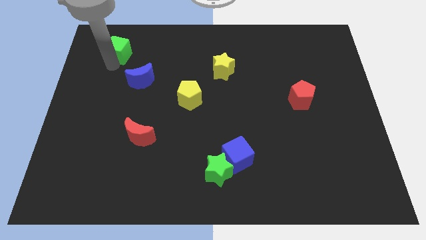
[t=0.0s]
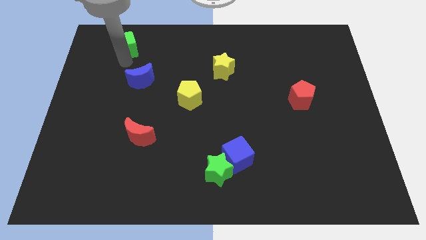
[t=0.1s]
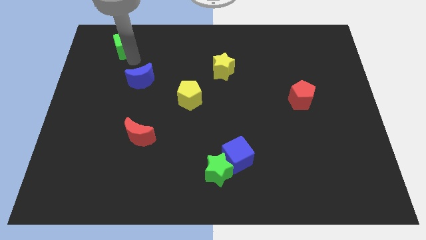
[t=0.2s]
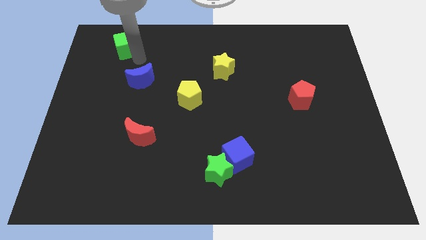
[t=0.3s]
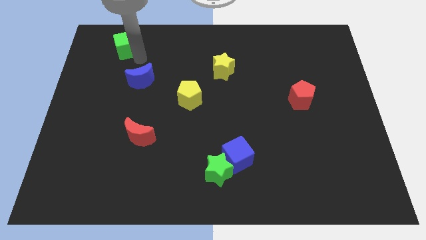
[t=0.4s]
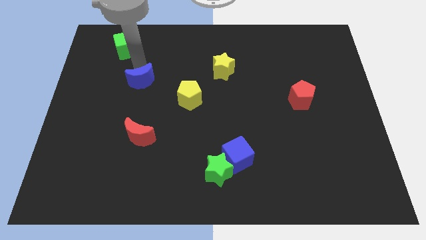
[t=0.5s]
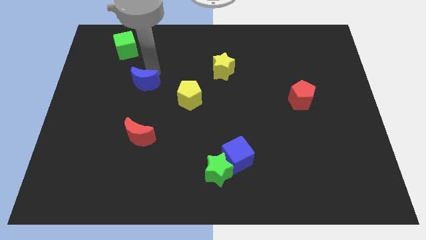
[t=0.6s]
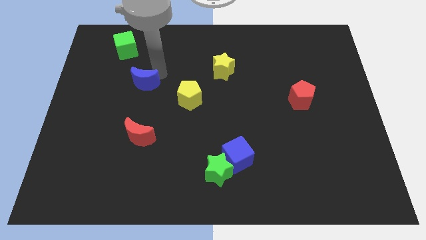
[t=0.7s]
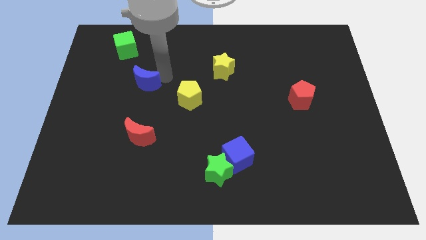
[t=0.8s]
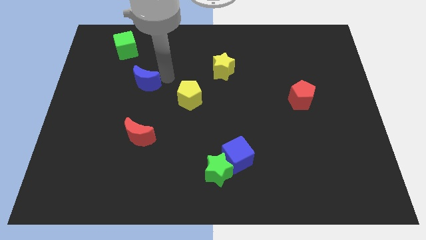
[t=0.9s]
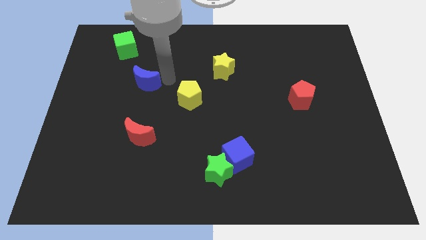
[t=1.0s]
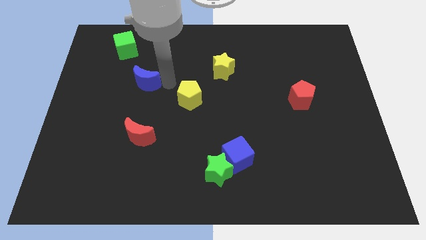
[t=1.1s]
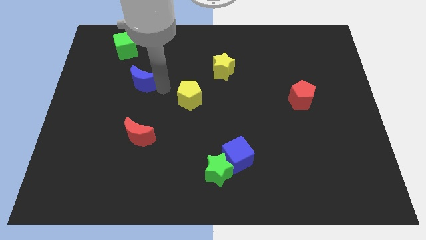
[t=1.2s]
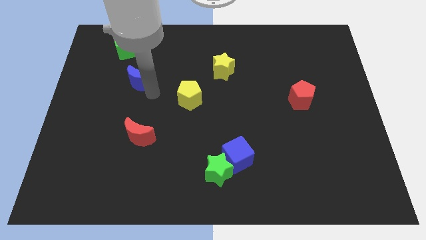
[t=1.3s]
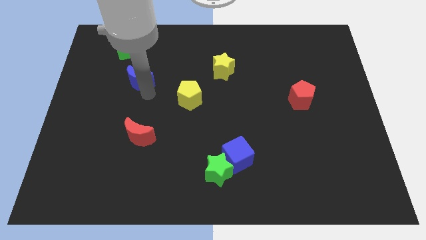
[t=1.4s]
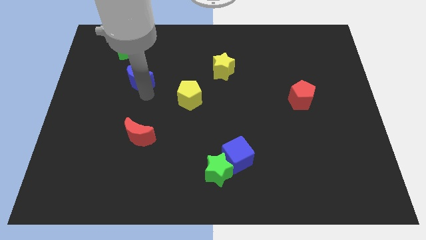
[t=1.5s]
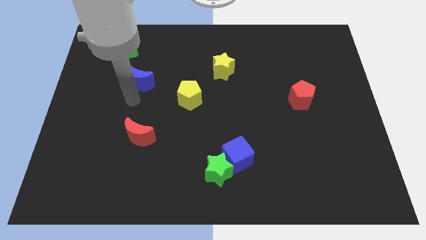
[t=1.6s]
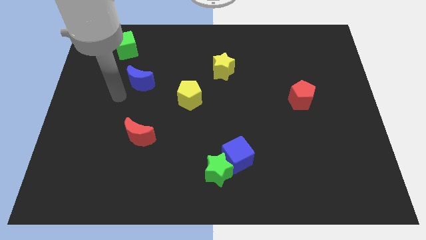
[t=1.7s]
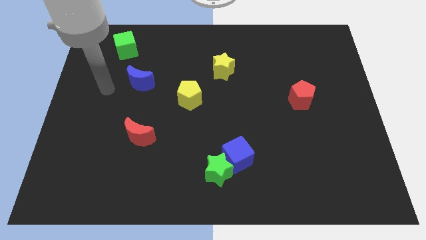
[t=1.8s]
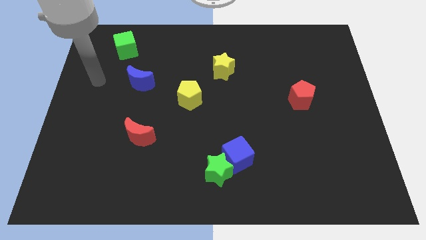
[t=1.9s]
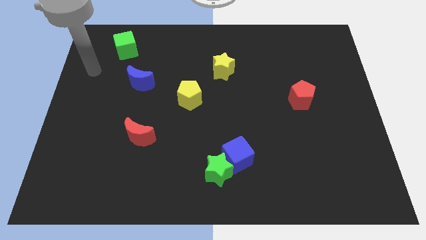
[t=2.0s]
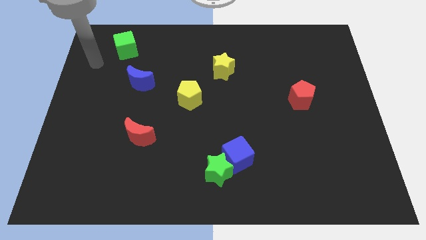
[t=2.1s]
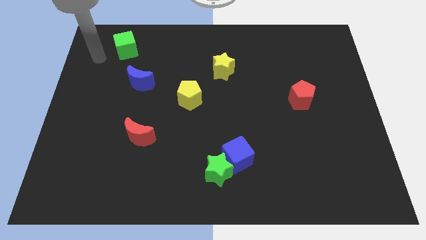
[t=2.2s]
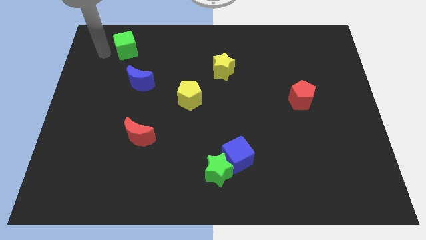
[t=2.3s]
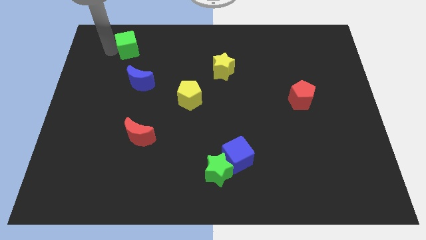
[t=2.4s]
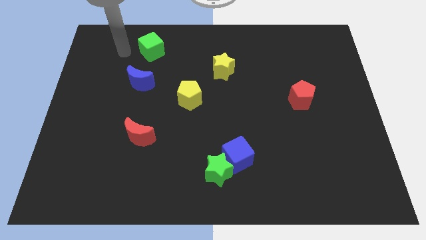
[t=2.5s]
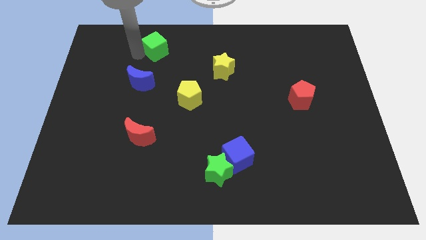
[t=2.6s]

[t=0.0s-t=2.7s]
slightly move down the blue moon

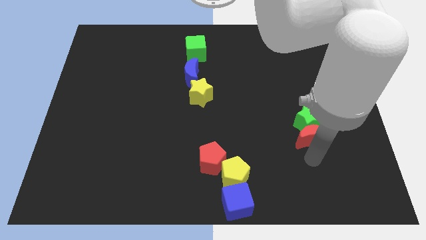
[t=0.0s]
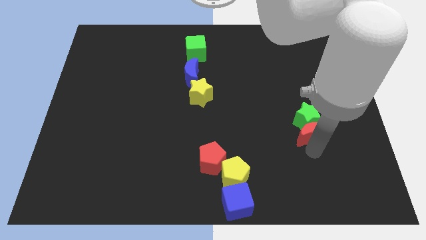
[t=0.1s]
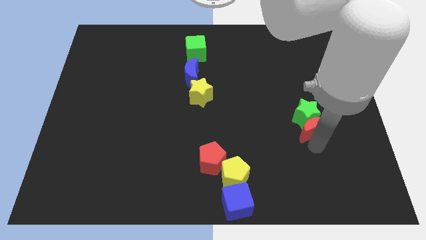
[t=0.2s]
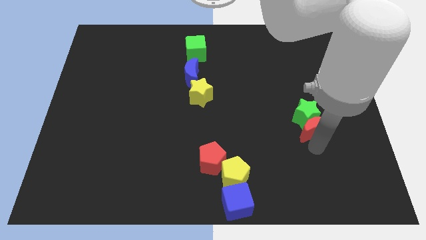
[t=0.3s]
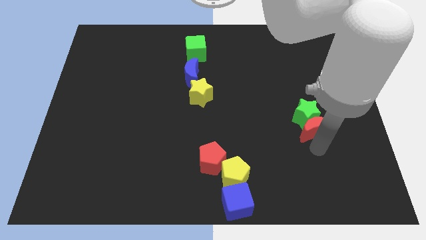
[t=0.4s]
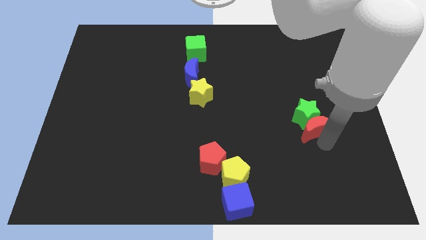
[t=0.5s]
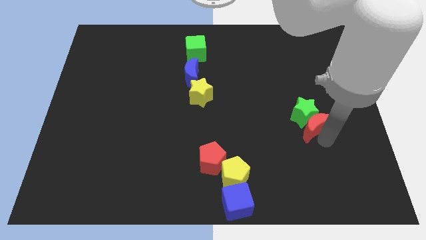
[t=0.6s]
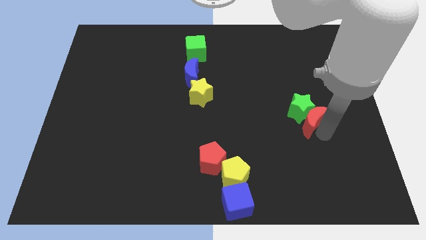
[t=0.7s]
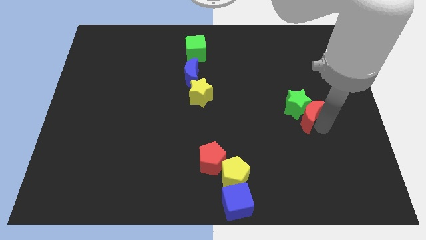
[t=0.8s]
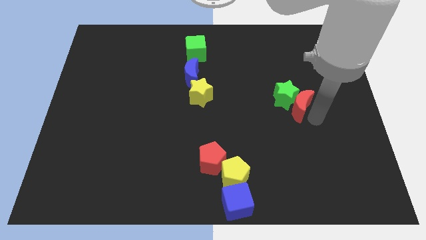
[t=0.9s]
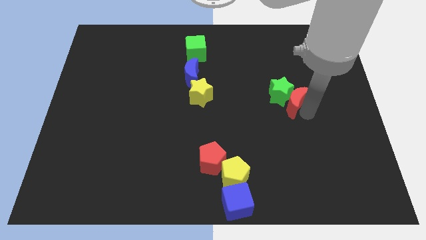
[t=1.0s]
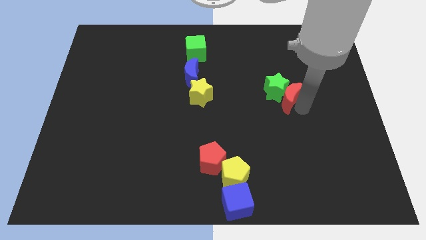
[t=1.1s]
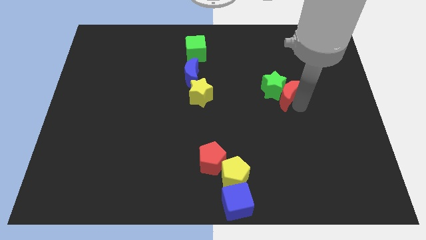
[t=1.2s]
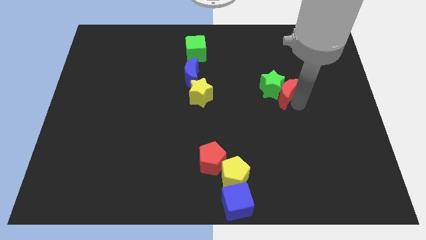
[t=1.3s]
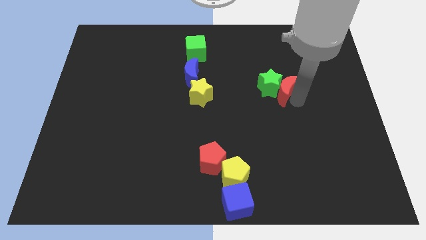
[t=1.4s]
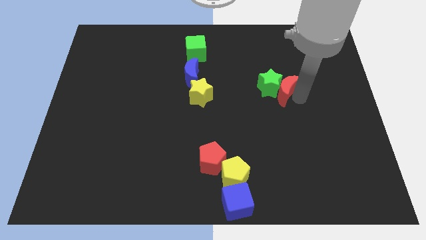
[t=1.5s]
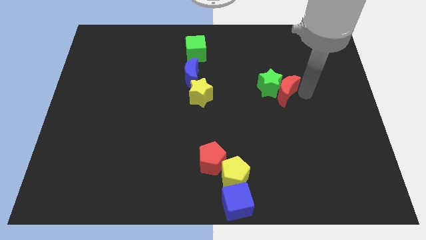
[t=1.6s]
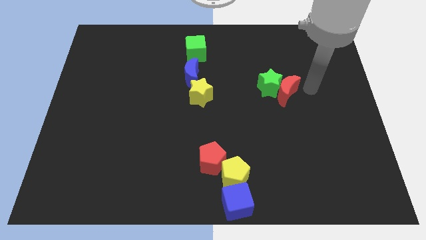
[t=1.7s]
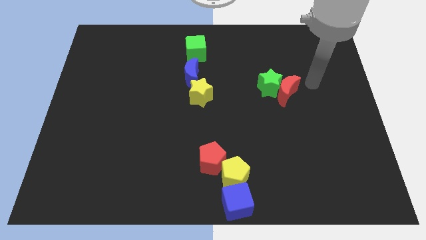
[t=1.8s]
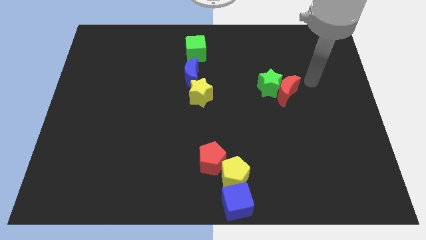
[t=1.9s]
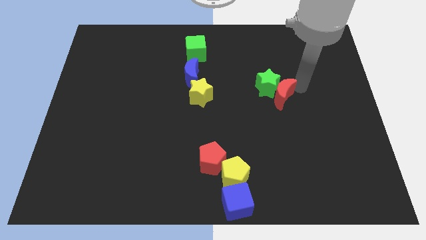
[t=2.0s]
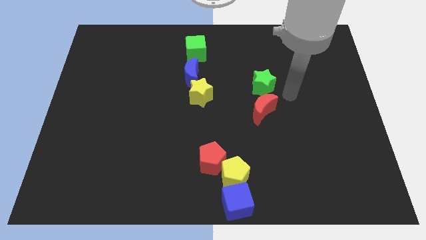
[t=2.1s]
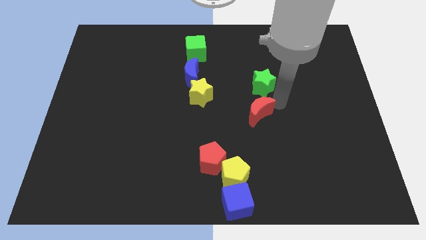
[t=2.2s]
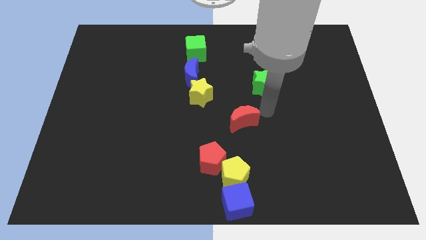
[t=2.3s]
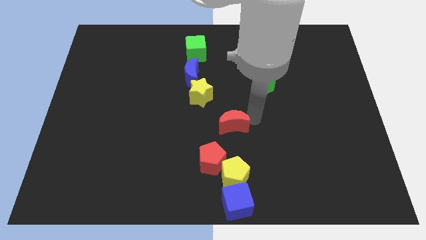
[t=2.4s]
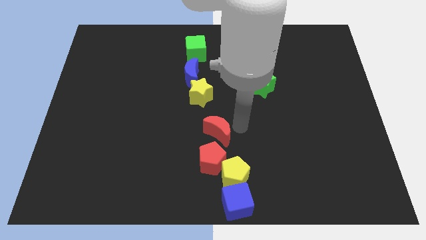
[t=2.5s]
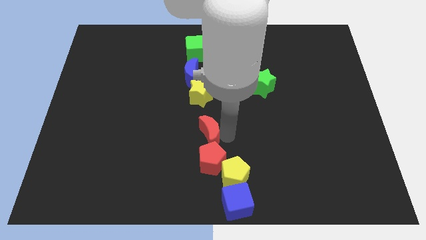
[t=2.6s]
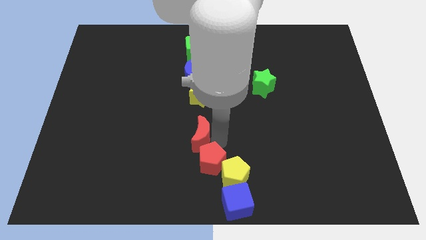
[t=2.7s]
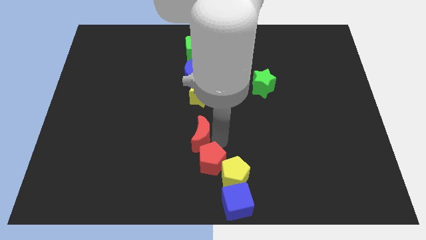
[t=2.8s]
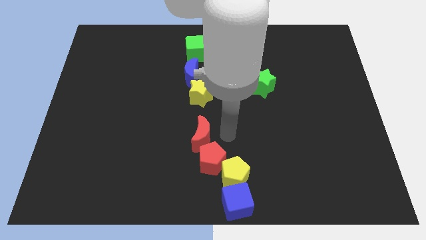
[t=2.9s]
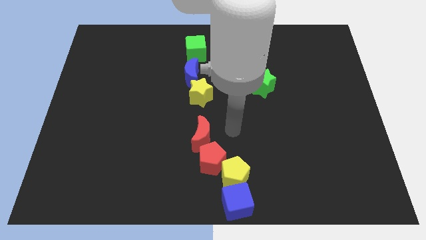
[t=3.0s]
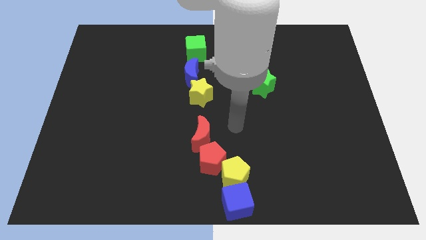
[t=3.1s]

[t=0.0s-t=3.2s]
place the red moon above the red pentagon

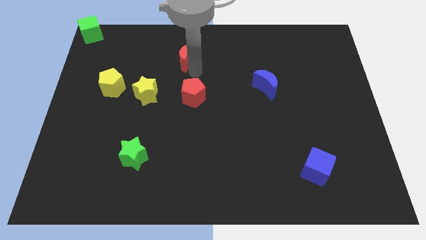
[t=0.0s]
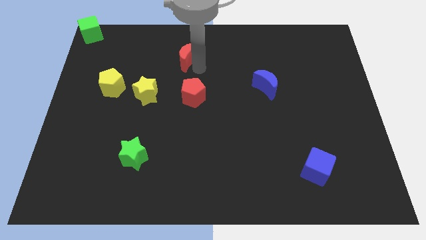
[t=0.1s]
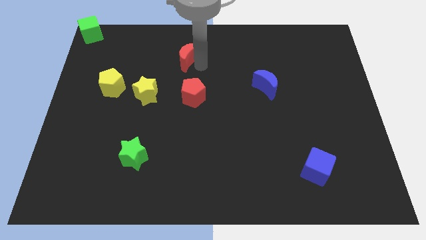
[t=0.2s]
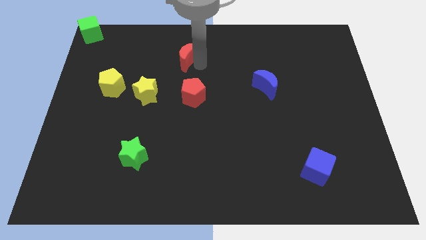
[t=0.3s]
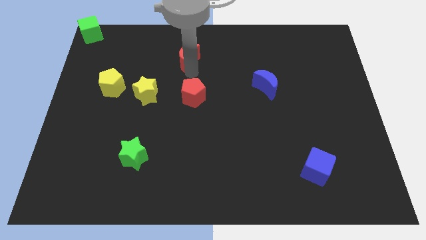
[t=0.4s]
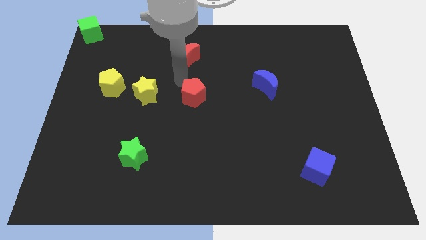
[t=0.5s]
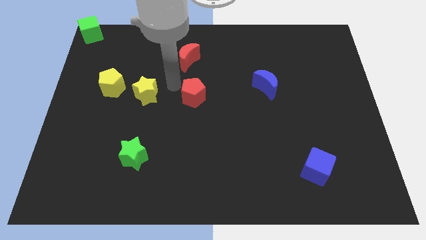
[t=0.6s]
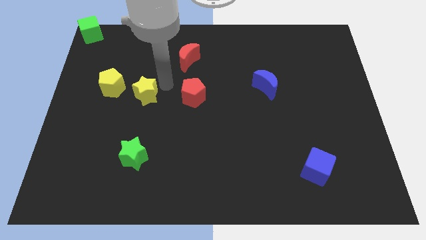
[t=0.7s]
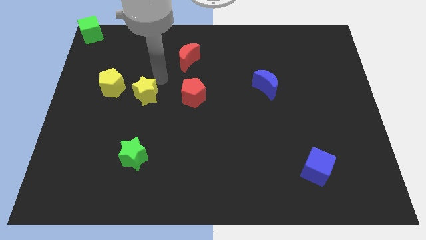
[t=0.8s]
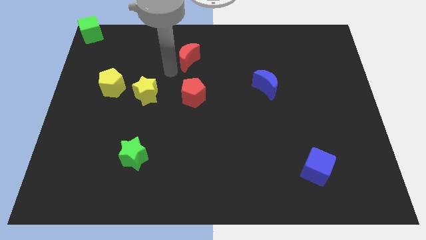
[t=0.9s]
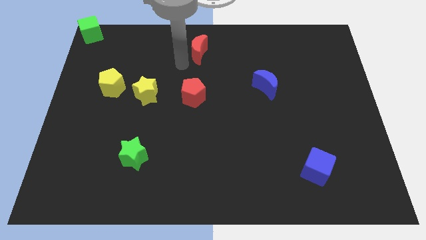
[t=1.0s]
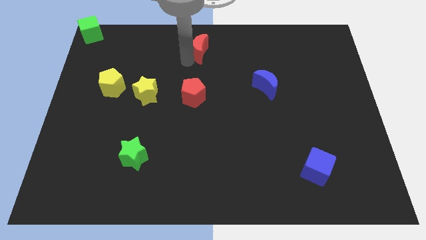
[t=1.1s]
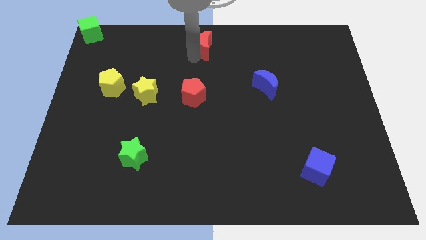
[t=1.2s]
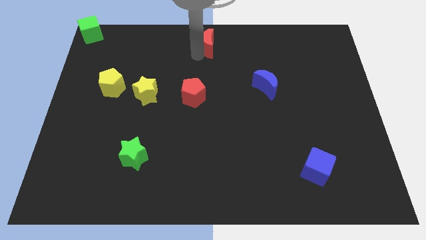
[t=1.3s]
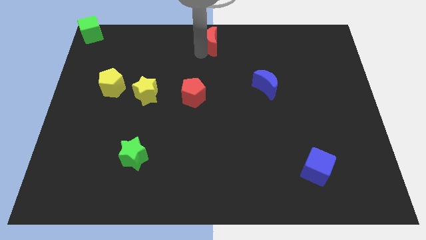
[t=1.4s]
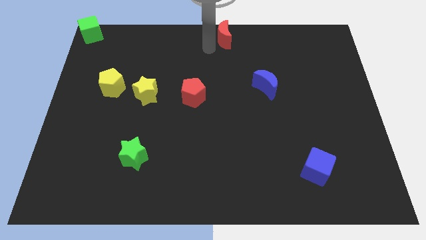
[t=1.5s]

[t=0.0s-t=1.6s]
place the red moon towards the top center of the board

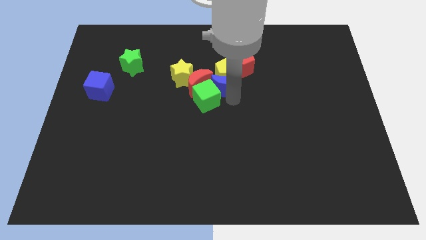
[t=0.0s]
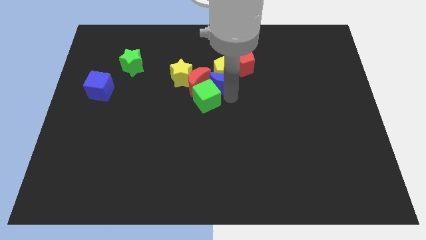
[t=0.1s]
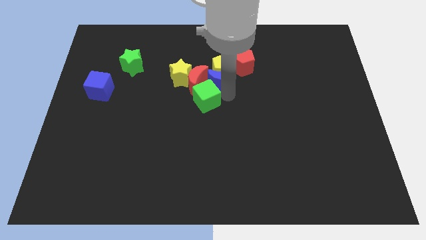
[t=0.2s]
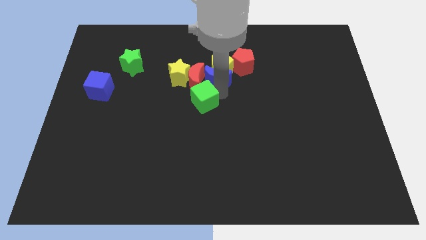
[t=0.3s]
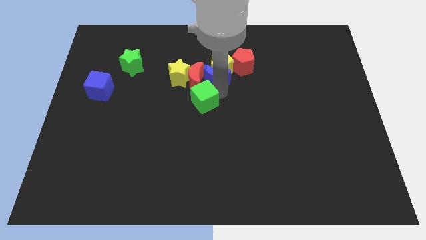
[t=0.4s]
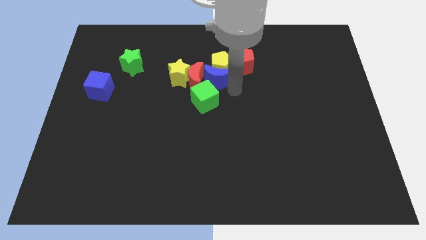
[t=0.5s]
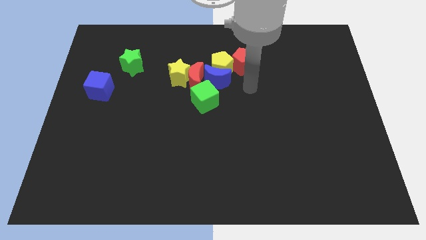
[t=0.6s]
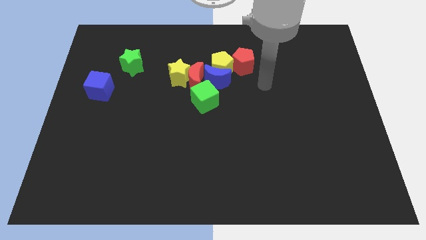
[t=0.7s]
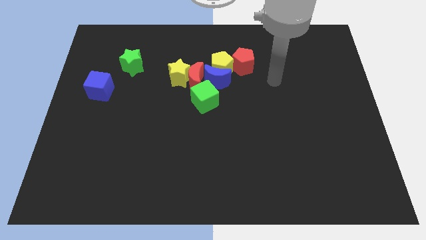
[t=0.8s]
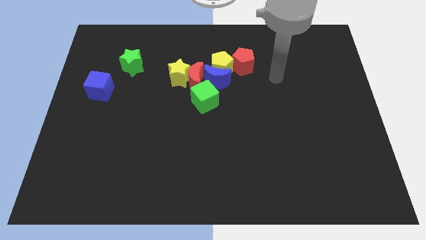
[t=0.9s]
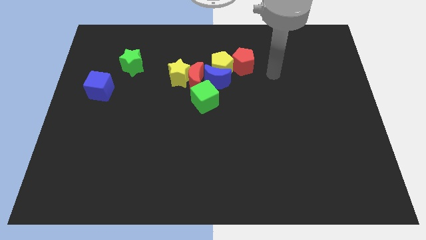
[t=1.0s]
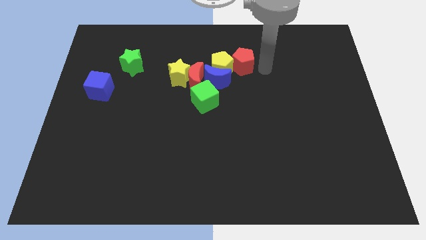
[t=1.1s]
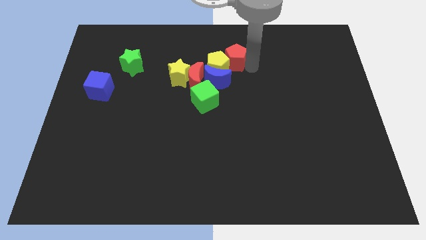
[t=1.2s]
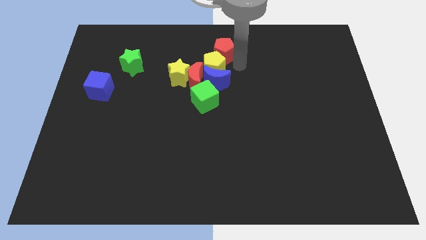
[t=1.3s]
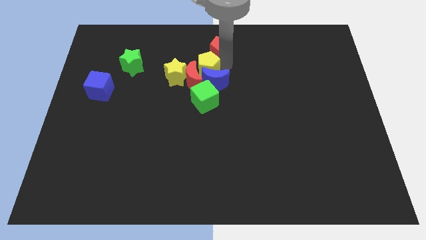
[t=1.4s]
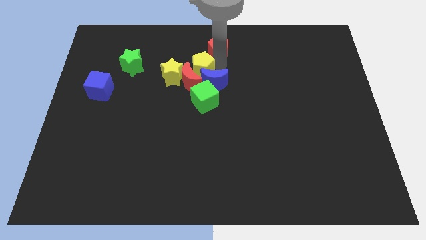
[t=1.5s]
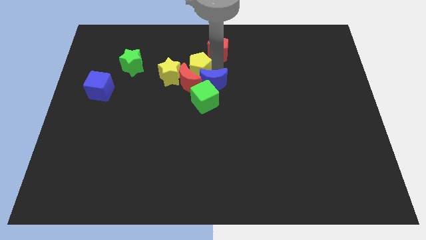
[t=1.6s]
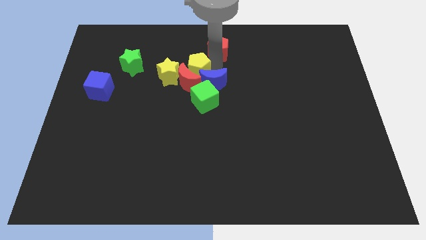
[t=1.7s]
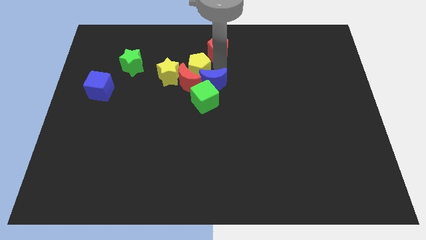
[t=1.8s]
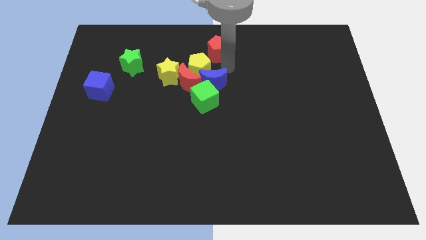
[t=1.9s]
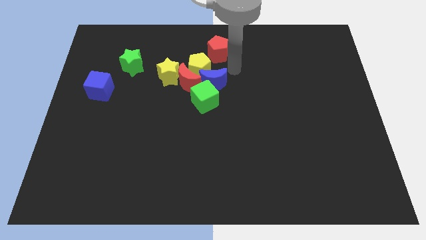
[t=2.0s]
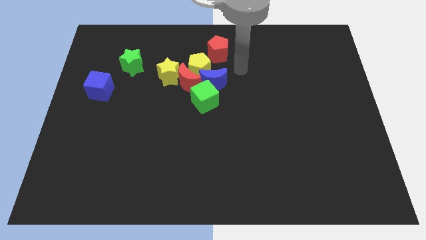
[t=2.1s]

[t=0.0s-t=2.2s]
push yellow pentagon slightly to the left
